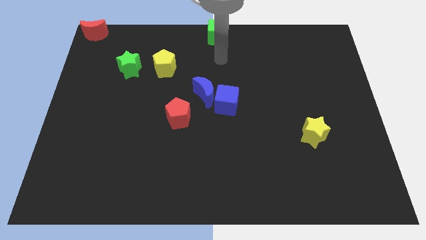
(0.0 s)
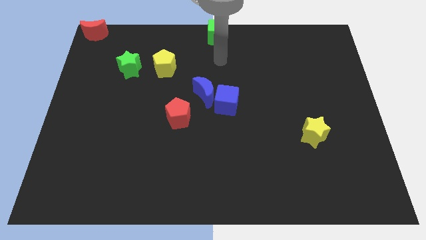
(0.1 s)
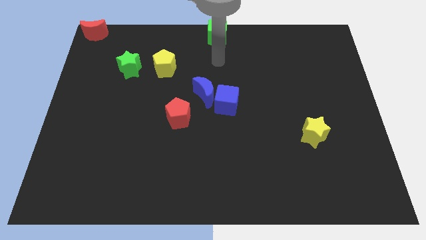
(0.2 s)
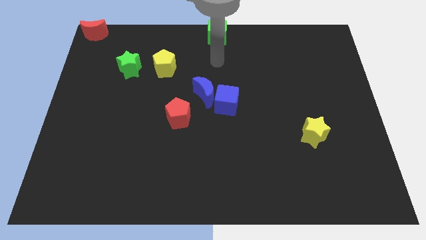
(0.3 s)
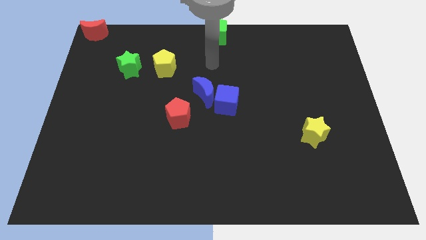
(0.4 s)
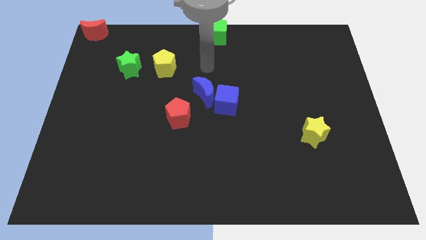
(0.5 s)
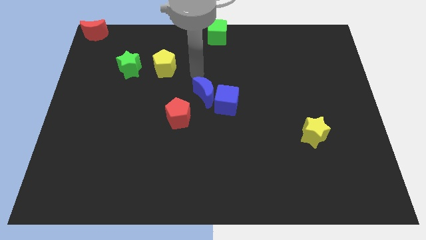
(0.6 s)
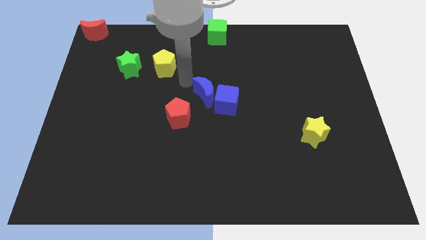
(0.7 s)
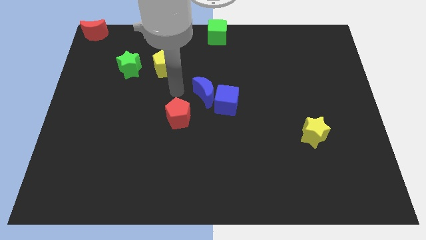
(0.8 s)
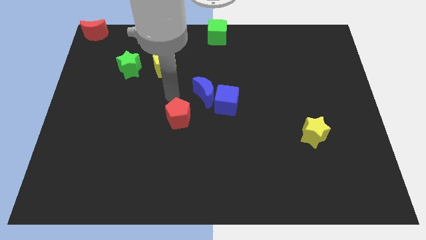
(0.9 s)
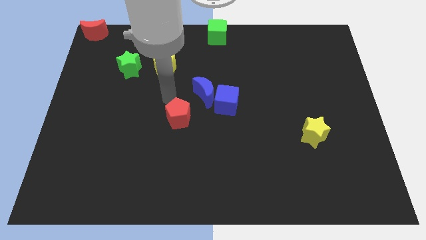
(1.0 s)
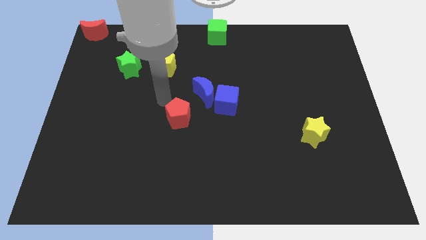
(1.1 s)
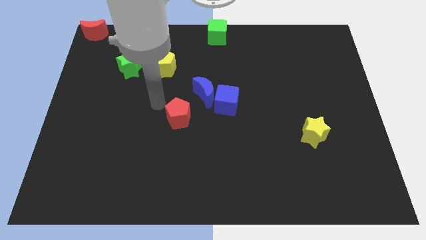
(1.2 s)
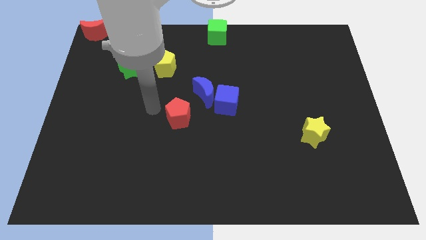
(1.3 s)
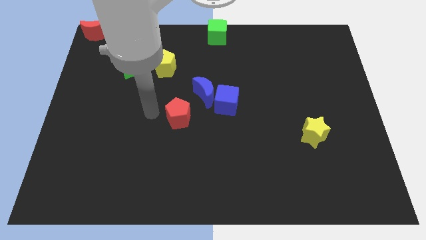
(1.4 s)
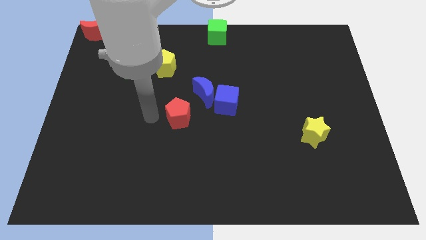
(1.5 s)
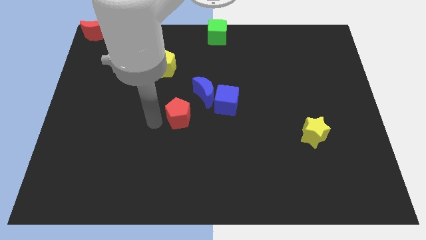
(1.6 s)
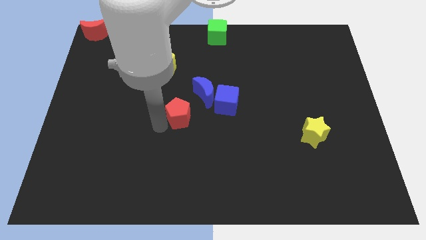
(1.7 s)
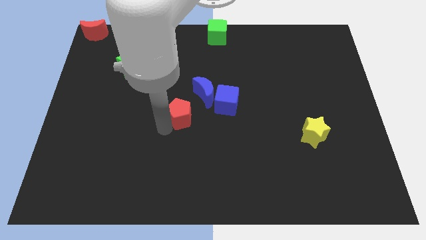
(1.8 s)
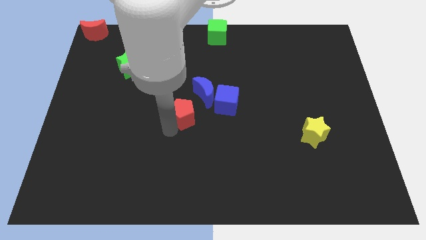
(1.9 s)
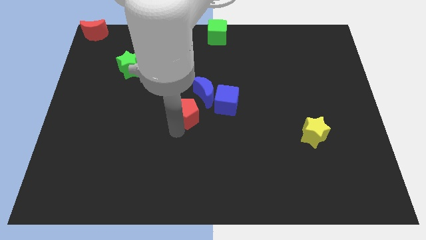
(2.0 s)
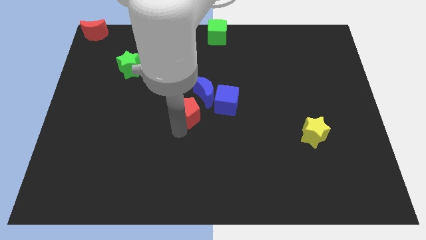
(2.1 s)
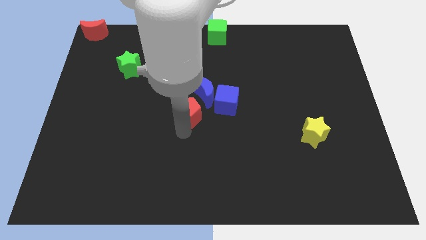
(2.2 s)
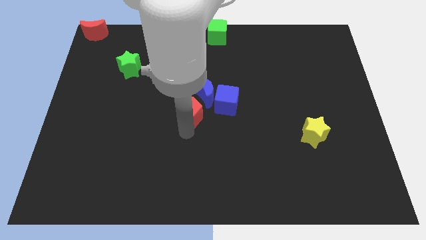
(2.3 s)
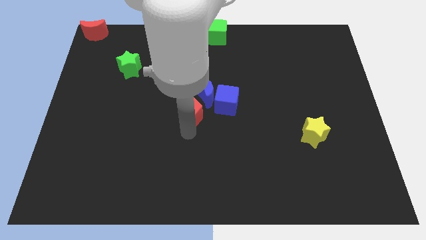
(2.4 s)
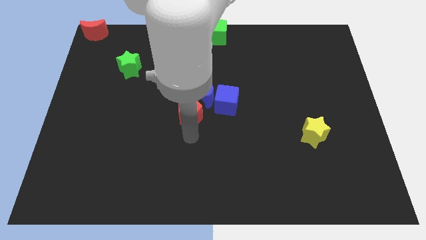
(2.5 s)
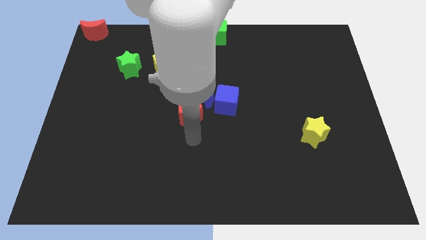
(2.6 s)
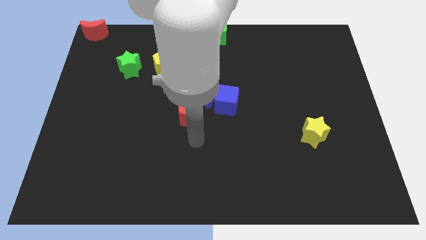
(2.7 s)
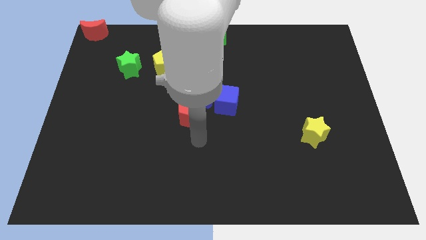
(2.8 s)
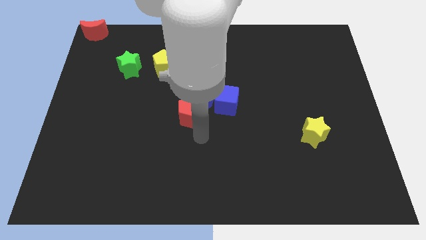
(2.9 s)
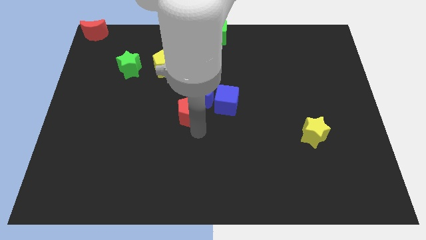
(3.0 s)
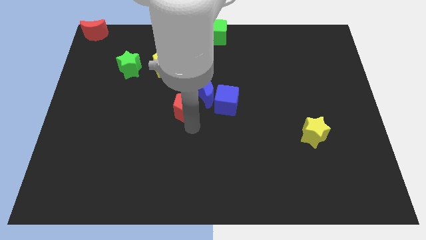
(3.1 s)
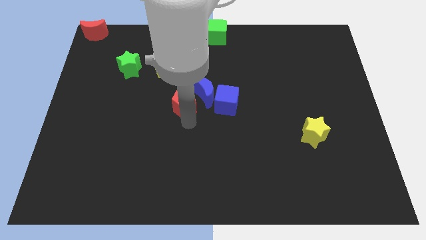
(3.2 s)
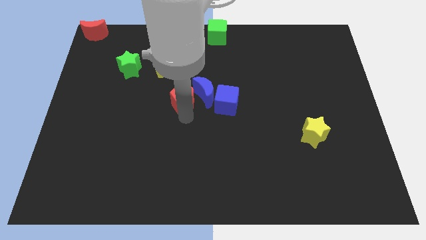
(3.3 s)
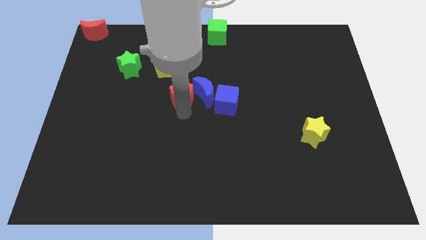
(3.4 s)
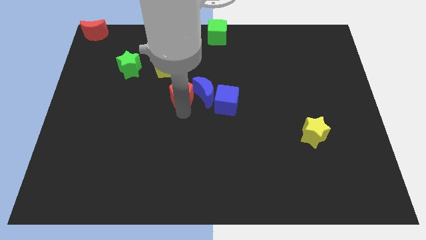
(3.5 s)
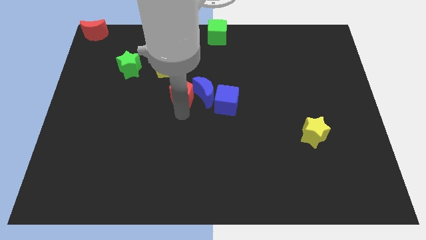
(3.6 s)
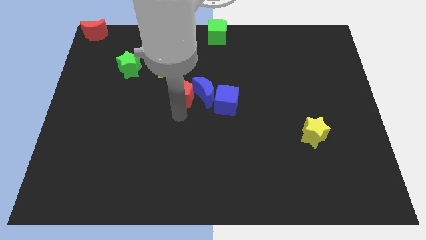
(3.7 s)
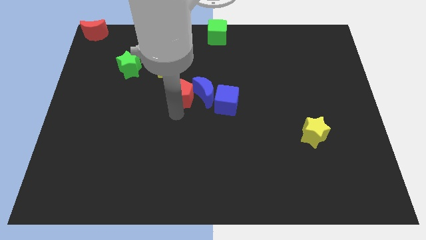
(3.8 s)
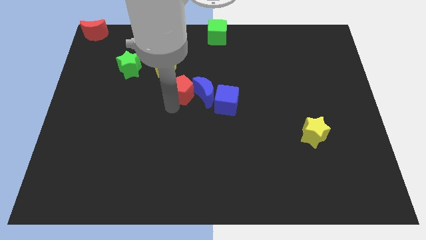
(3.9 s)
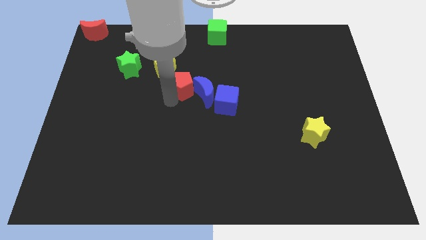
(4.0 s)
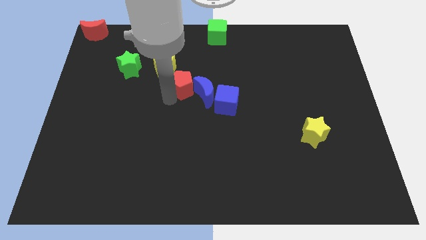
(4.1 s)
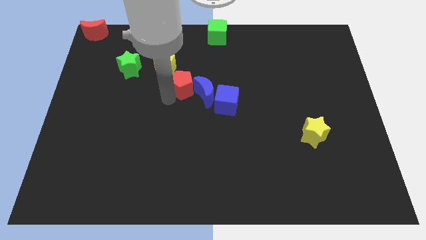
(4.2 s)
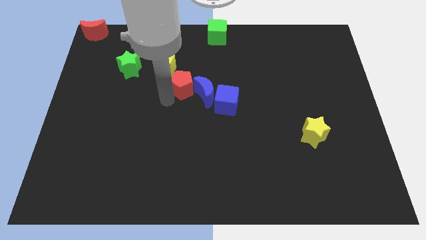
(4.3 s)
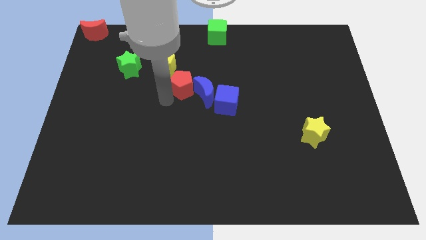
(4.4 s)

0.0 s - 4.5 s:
push the red pentagon into the blue crescent

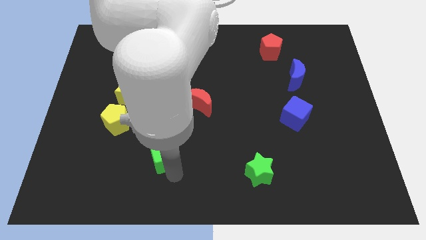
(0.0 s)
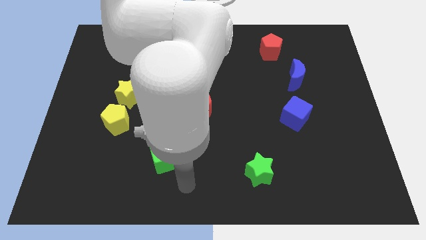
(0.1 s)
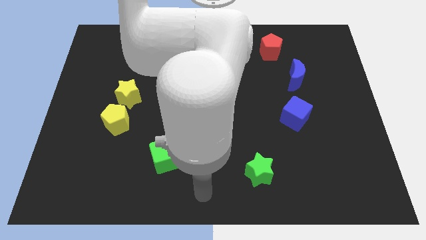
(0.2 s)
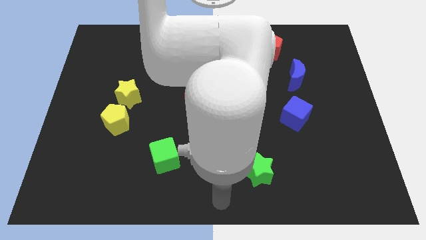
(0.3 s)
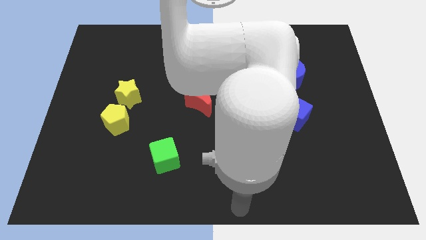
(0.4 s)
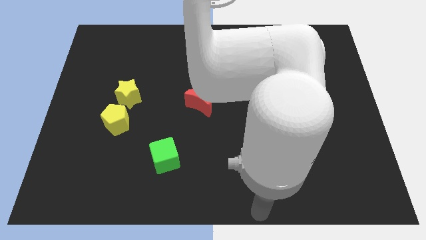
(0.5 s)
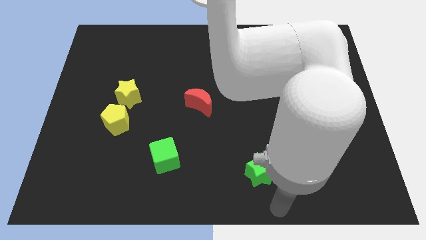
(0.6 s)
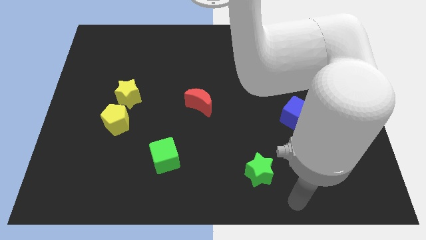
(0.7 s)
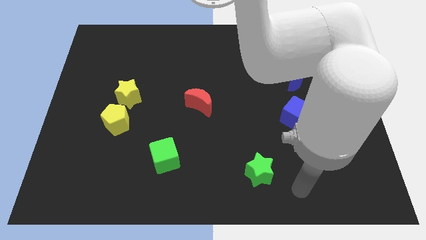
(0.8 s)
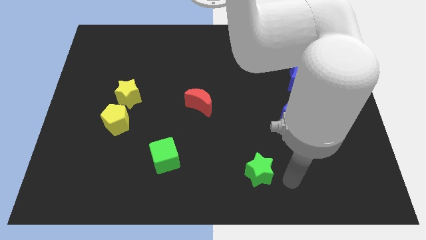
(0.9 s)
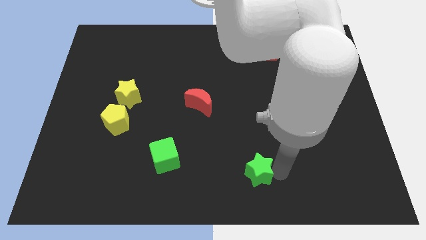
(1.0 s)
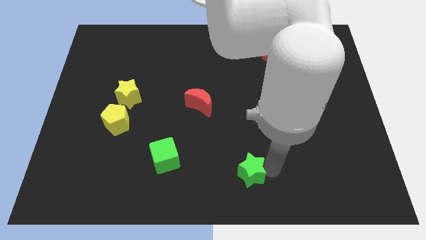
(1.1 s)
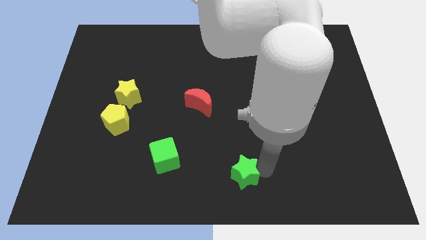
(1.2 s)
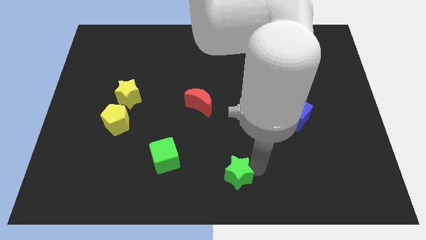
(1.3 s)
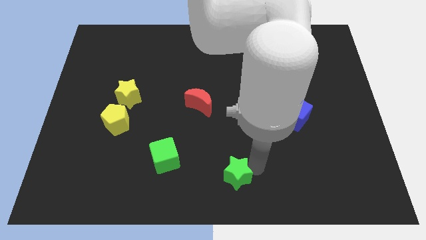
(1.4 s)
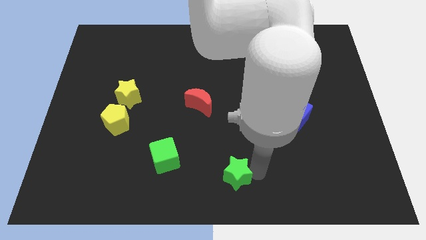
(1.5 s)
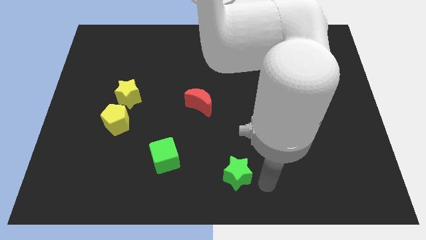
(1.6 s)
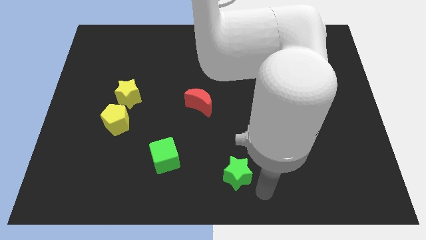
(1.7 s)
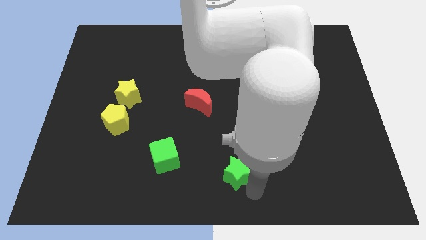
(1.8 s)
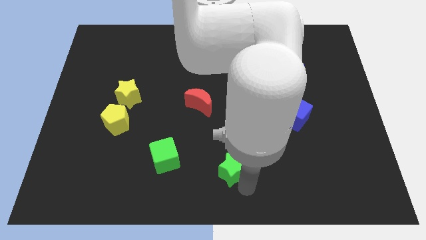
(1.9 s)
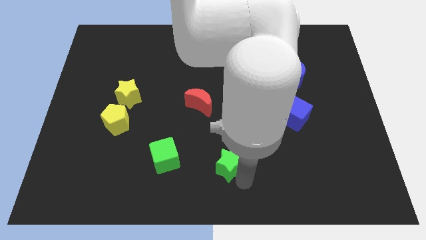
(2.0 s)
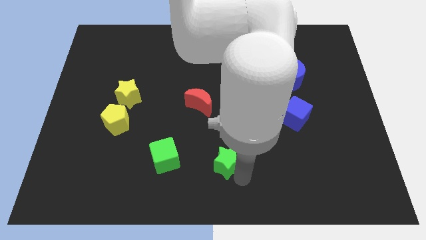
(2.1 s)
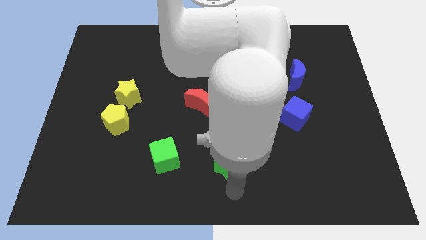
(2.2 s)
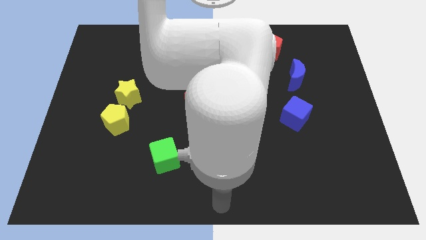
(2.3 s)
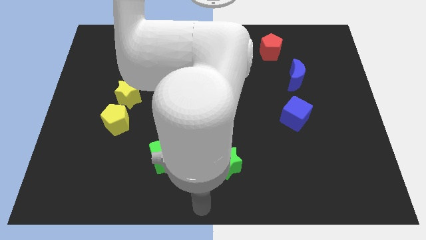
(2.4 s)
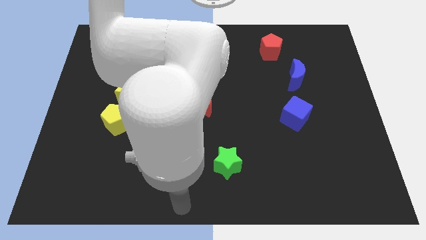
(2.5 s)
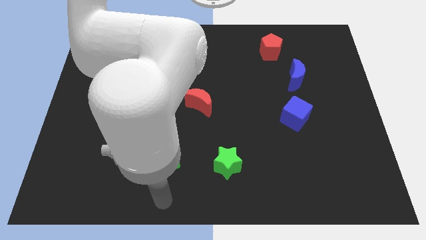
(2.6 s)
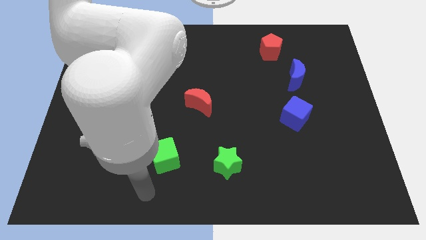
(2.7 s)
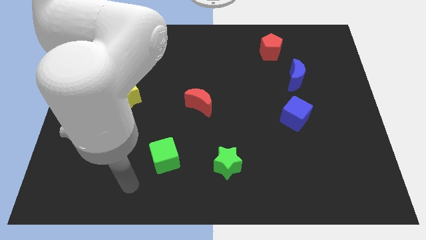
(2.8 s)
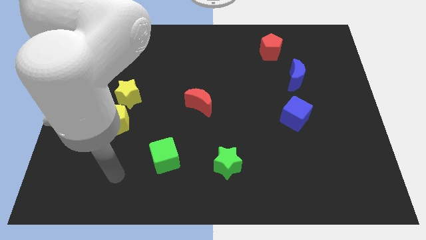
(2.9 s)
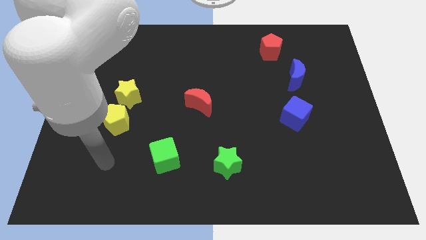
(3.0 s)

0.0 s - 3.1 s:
put the green star to the right side of the green cube

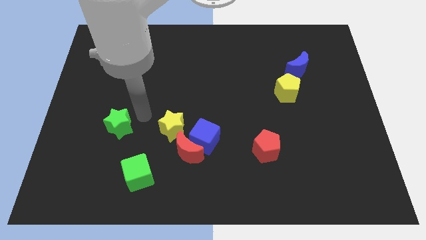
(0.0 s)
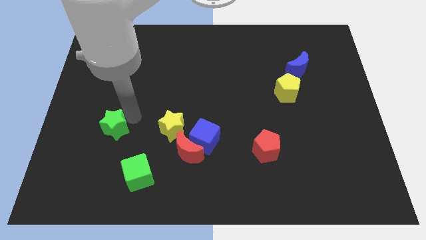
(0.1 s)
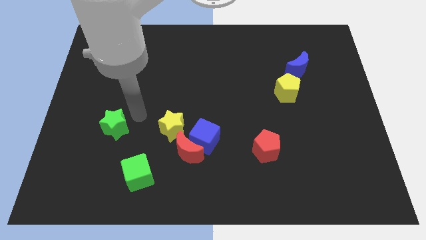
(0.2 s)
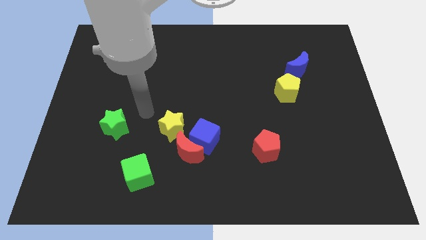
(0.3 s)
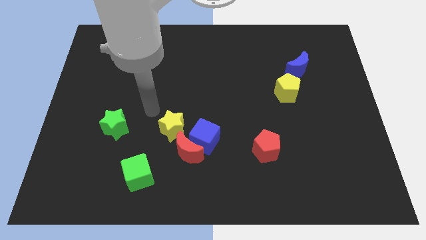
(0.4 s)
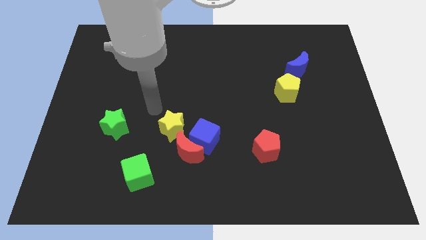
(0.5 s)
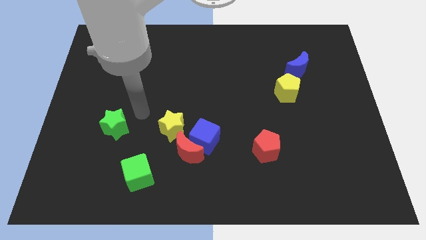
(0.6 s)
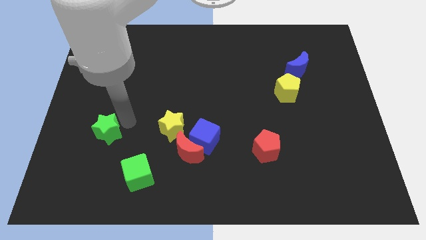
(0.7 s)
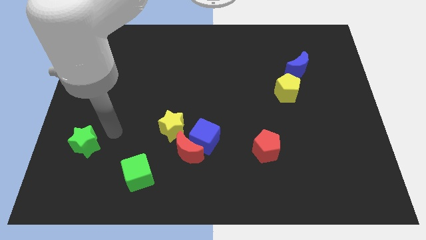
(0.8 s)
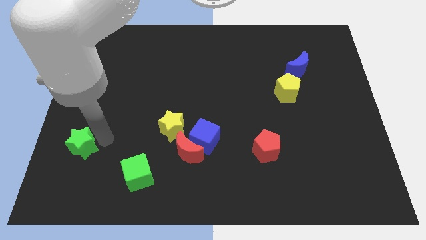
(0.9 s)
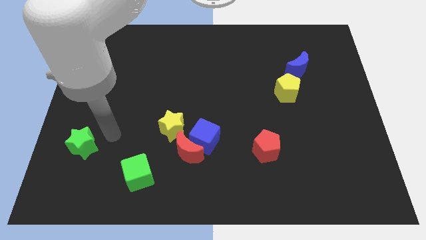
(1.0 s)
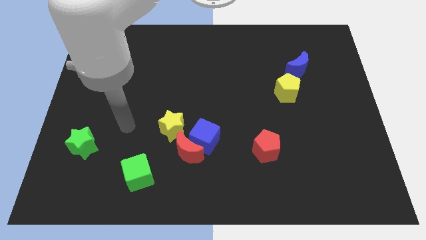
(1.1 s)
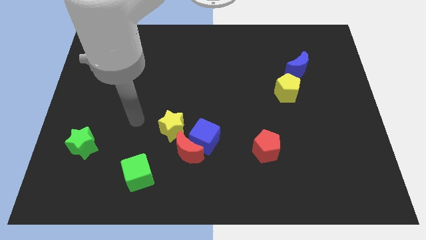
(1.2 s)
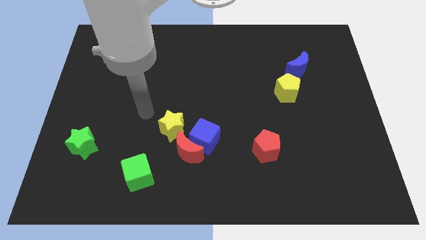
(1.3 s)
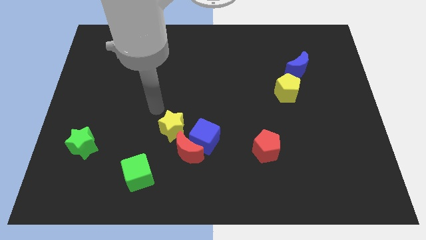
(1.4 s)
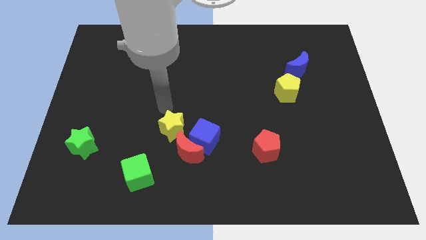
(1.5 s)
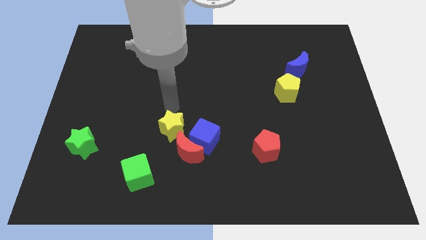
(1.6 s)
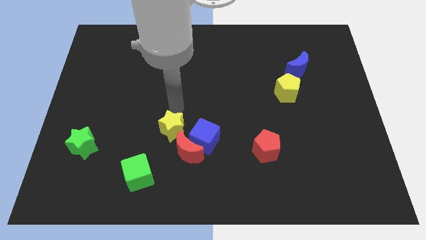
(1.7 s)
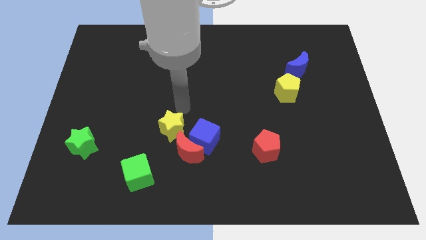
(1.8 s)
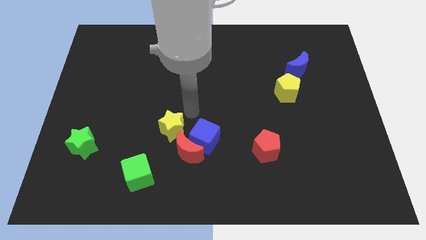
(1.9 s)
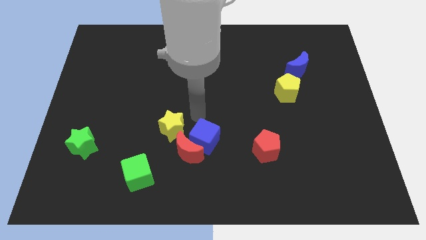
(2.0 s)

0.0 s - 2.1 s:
move the green star towards the left corner
